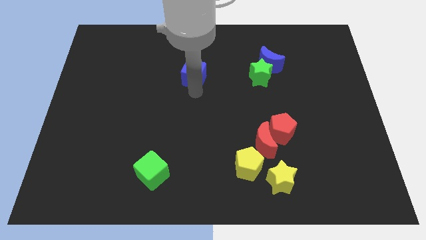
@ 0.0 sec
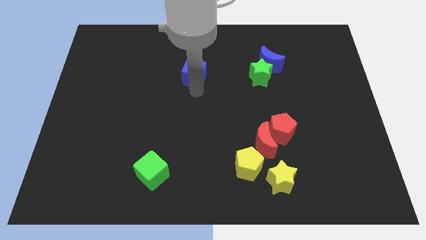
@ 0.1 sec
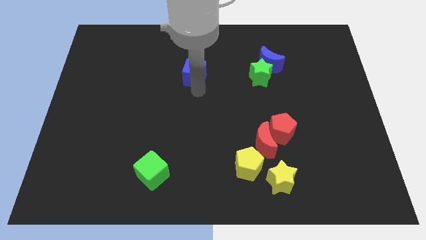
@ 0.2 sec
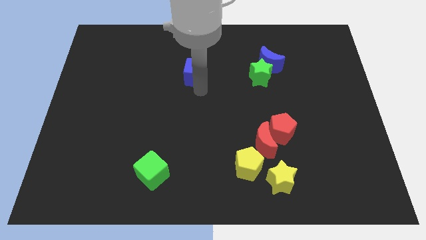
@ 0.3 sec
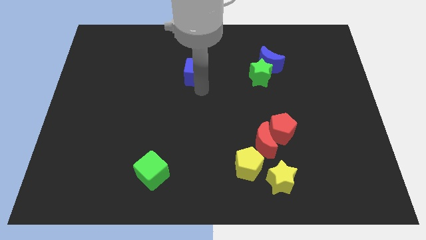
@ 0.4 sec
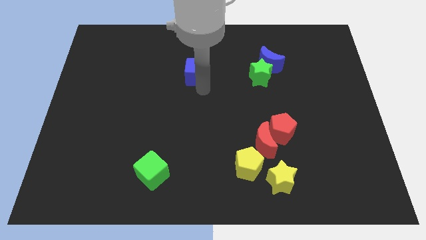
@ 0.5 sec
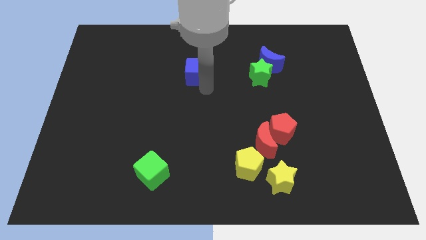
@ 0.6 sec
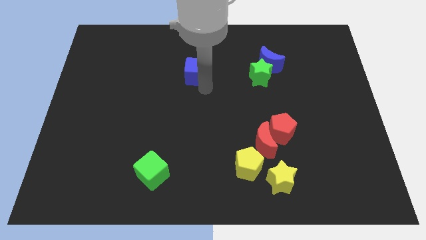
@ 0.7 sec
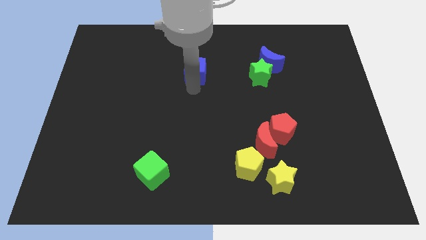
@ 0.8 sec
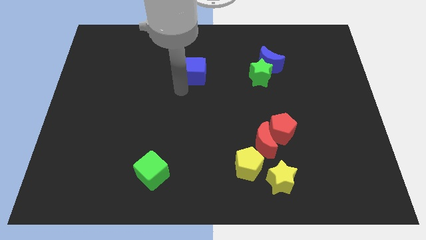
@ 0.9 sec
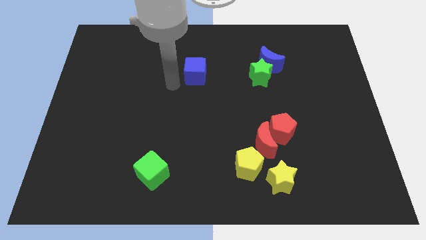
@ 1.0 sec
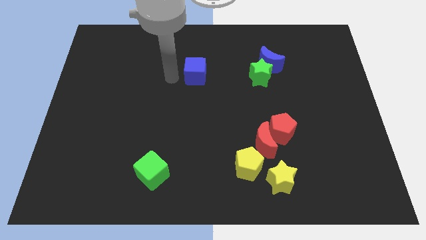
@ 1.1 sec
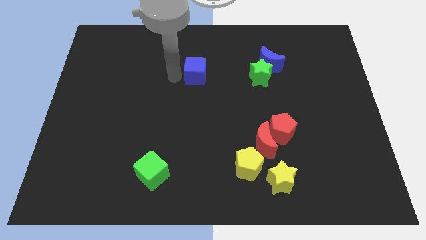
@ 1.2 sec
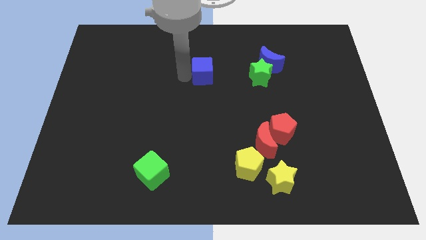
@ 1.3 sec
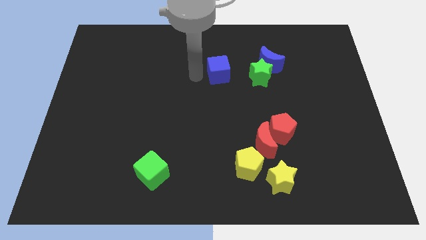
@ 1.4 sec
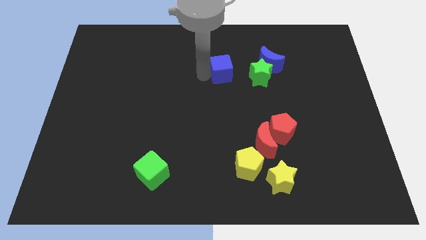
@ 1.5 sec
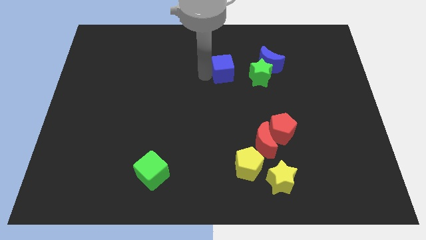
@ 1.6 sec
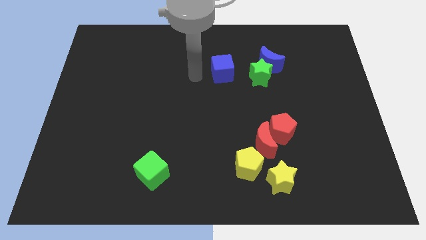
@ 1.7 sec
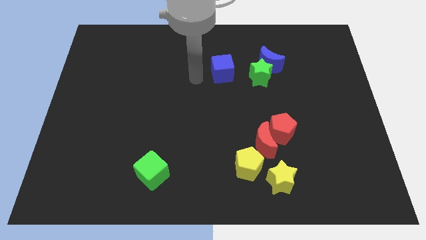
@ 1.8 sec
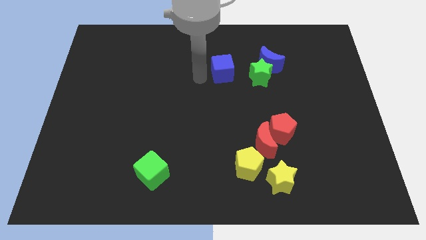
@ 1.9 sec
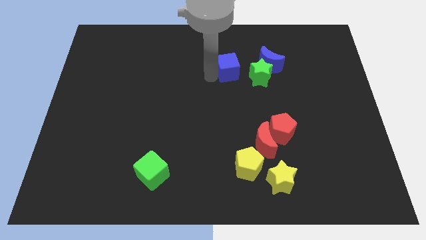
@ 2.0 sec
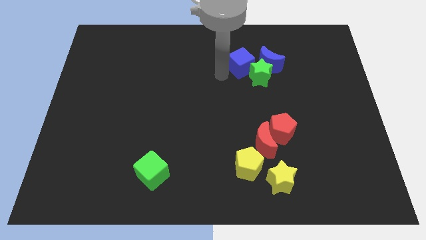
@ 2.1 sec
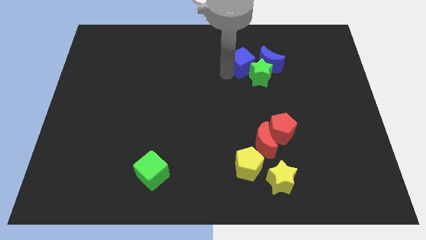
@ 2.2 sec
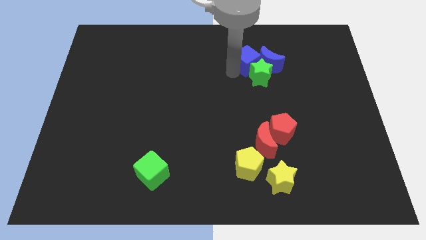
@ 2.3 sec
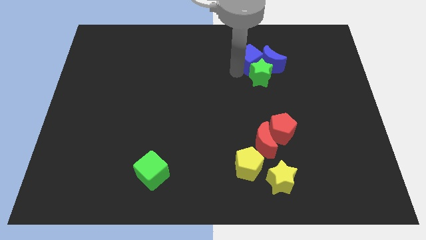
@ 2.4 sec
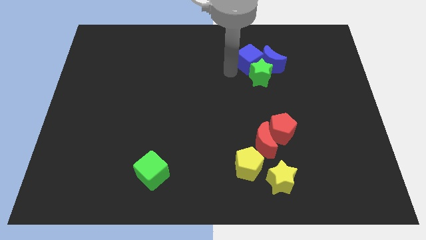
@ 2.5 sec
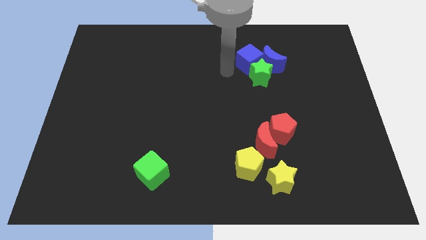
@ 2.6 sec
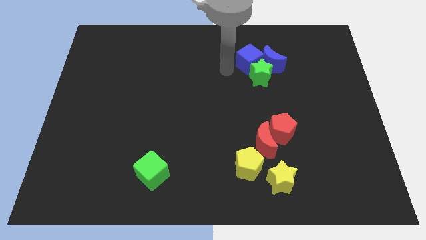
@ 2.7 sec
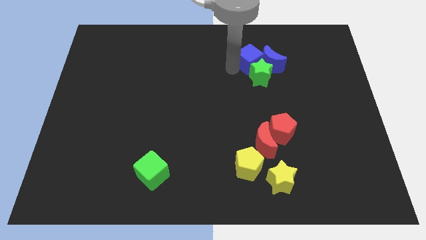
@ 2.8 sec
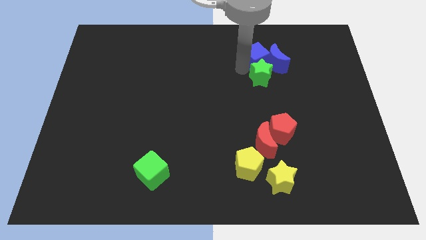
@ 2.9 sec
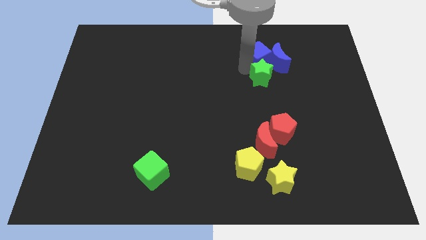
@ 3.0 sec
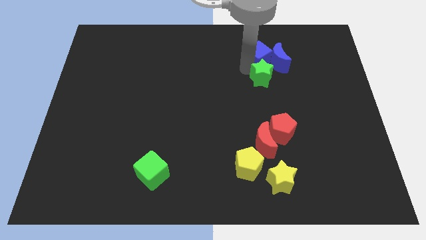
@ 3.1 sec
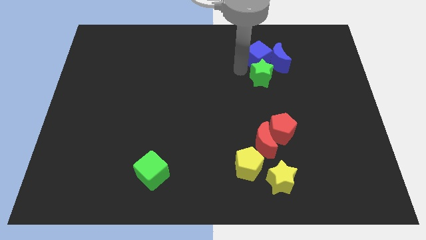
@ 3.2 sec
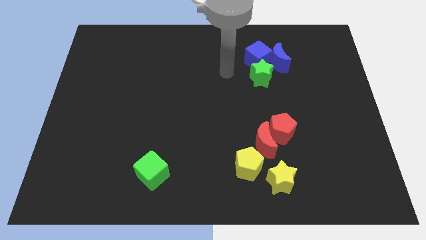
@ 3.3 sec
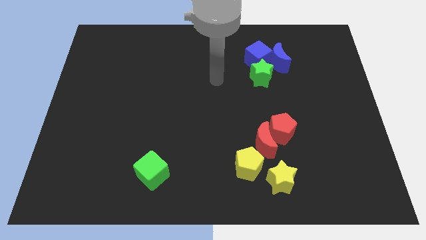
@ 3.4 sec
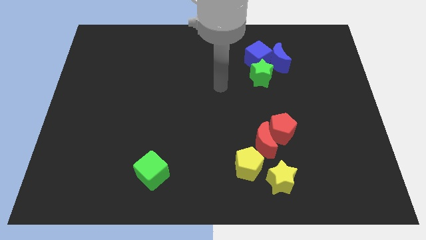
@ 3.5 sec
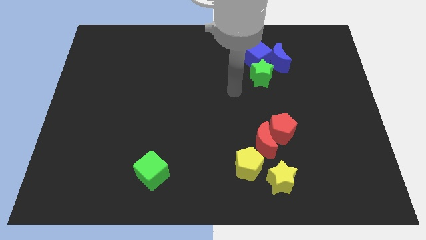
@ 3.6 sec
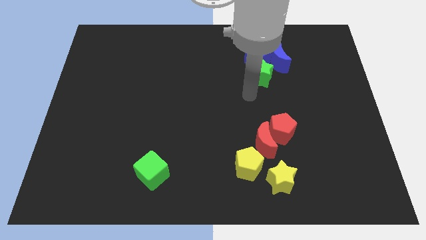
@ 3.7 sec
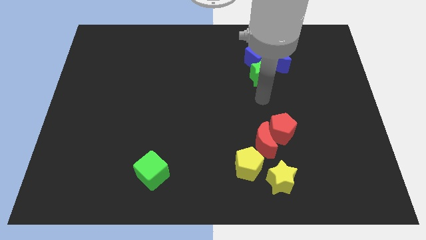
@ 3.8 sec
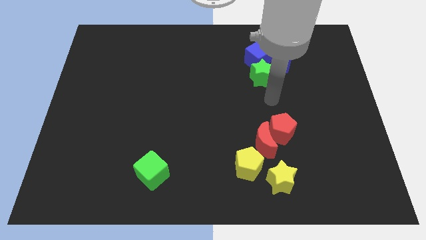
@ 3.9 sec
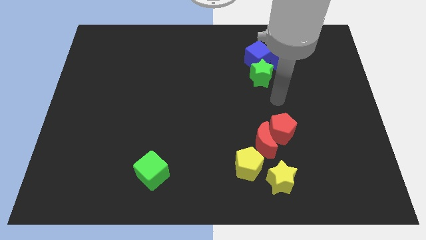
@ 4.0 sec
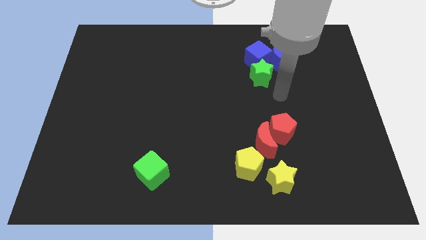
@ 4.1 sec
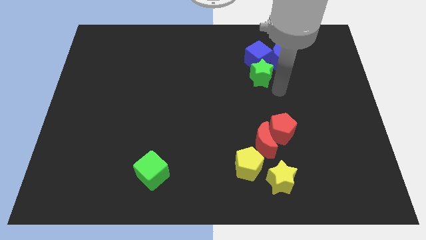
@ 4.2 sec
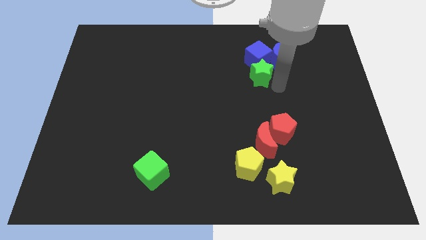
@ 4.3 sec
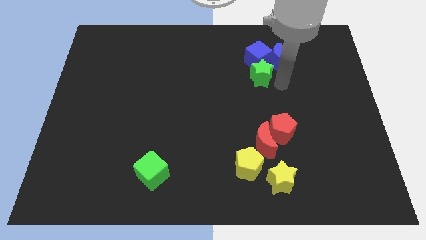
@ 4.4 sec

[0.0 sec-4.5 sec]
place blue cube to the top of green star

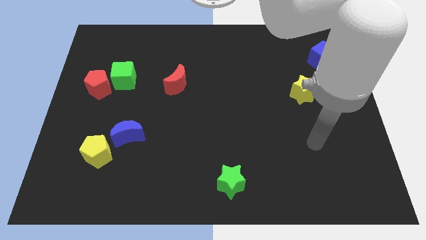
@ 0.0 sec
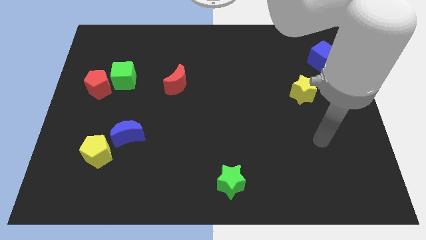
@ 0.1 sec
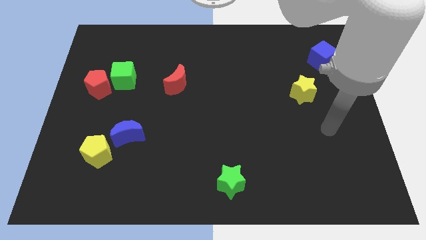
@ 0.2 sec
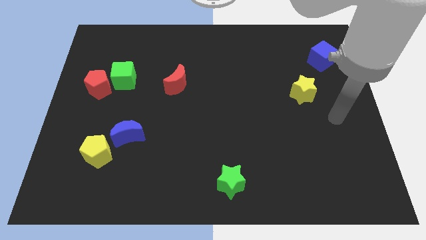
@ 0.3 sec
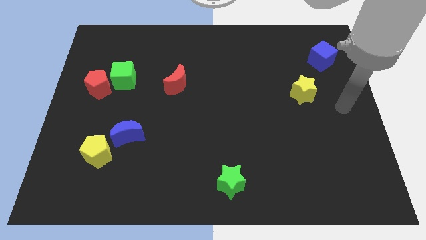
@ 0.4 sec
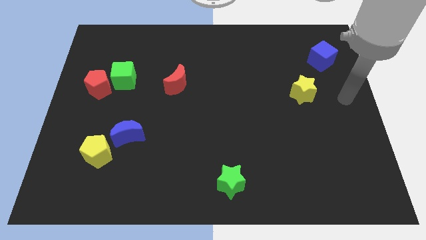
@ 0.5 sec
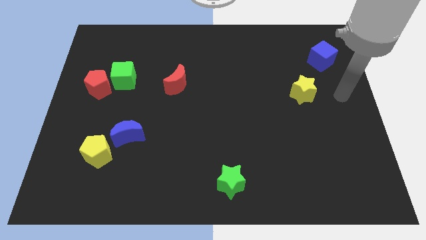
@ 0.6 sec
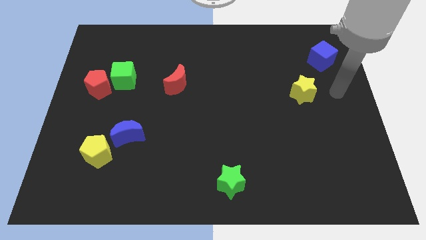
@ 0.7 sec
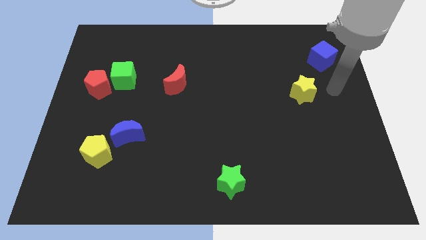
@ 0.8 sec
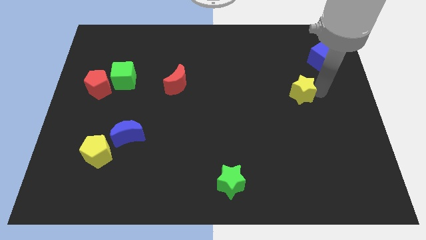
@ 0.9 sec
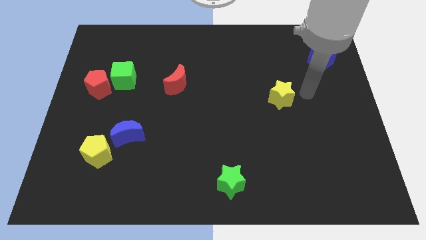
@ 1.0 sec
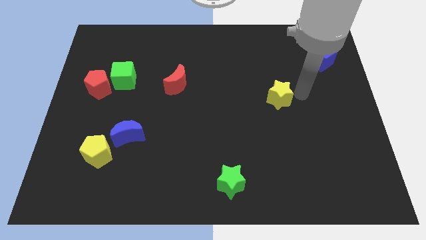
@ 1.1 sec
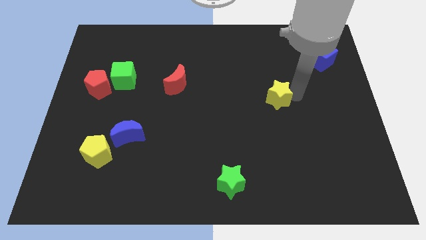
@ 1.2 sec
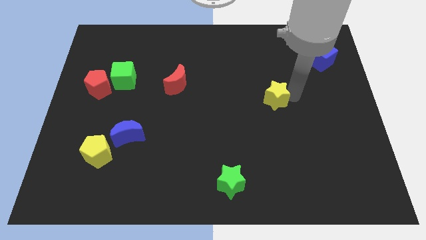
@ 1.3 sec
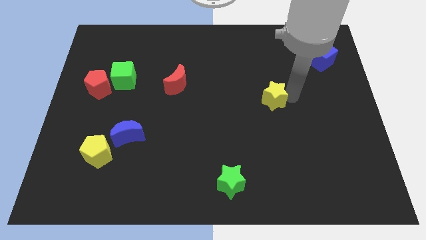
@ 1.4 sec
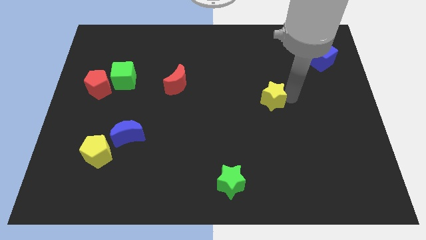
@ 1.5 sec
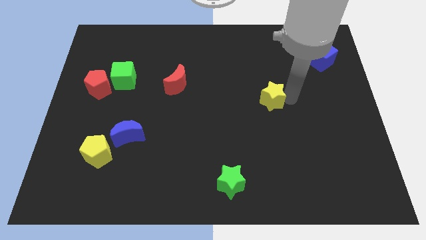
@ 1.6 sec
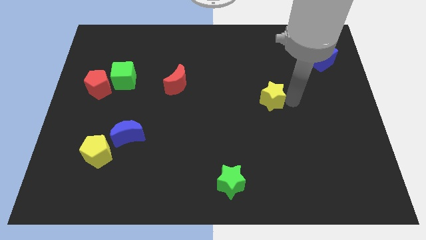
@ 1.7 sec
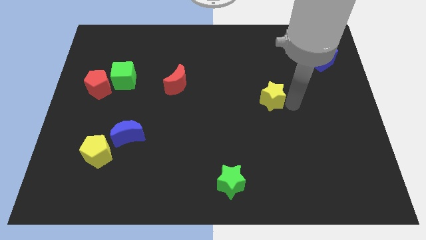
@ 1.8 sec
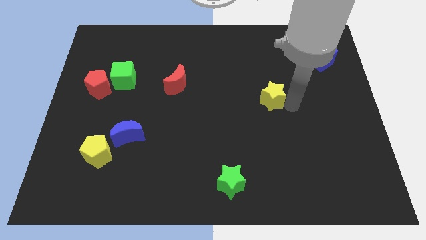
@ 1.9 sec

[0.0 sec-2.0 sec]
push the yellow star slightly to the left

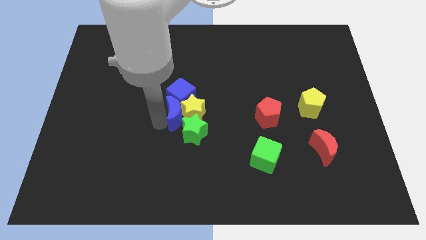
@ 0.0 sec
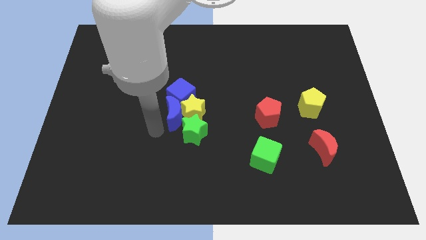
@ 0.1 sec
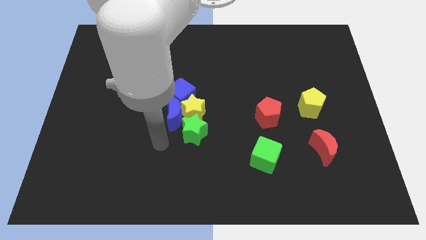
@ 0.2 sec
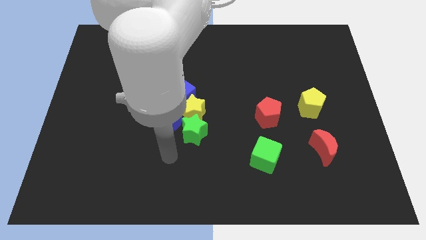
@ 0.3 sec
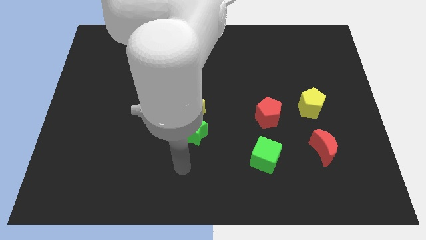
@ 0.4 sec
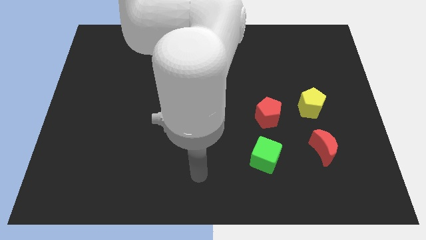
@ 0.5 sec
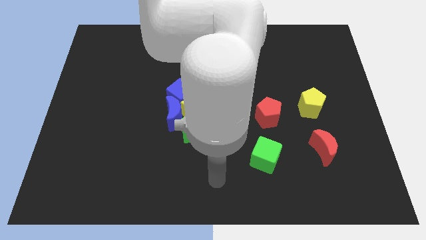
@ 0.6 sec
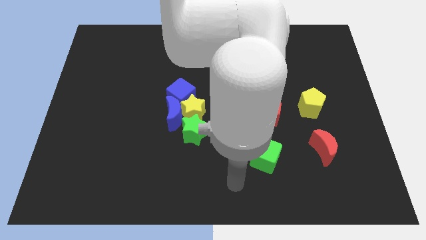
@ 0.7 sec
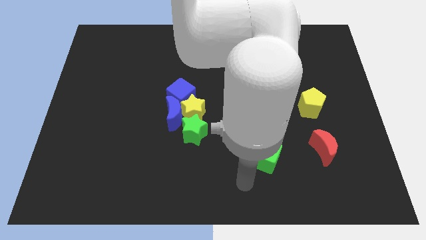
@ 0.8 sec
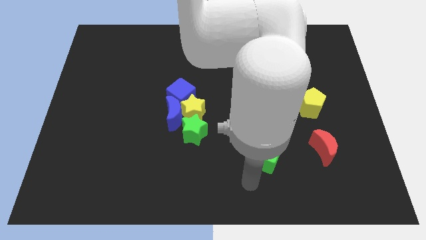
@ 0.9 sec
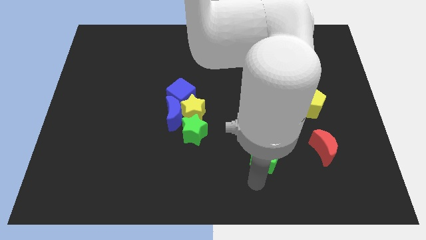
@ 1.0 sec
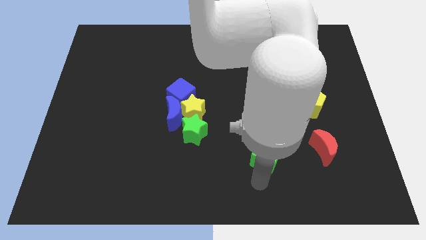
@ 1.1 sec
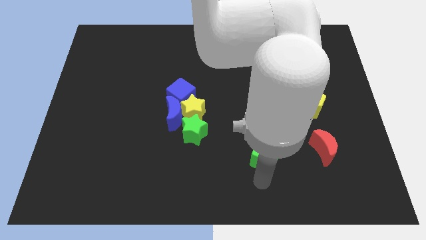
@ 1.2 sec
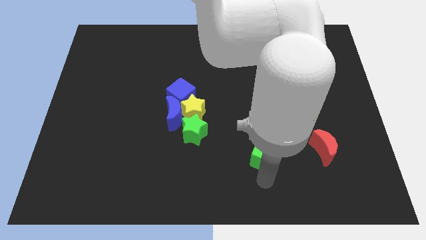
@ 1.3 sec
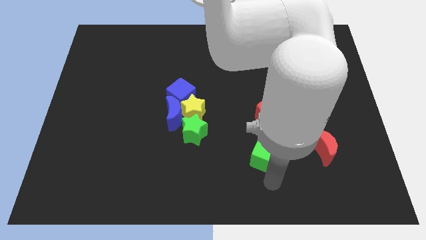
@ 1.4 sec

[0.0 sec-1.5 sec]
place your arm below the green cube

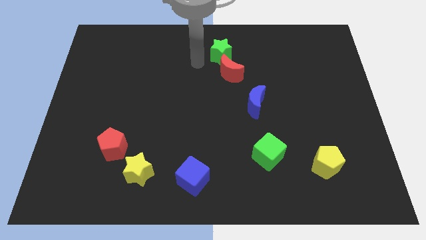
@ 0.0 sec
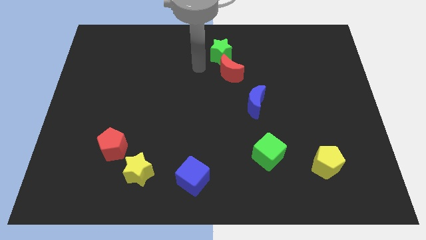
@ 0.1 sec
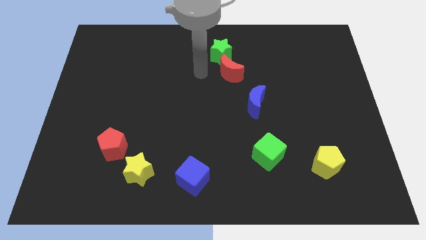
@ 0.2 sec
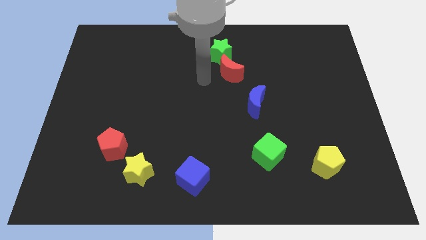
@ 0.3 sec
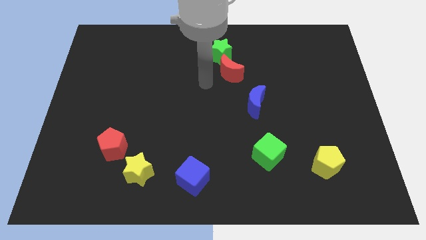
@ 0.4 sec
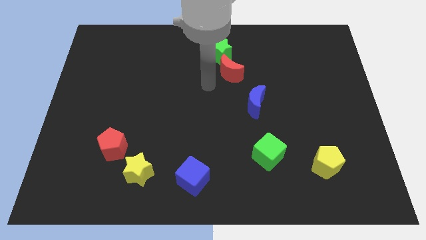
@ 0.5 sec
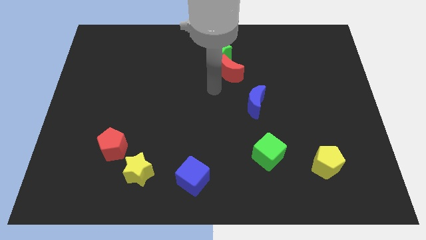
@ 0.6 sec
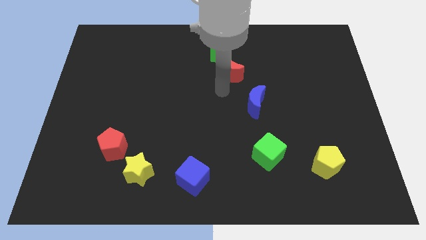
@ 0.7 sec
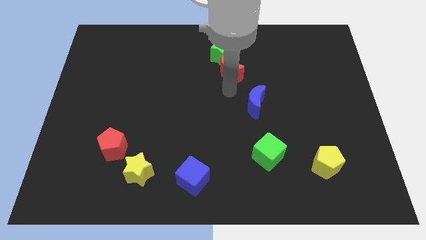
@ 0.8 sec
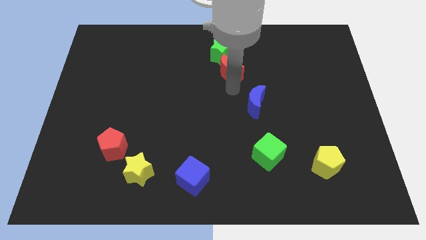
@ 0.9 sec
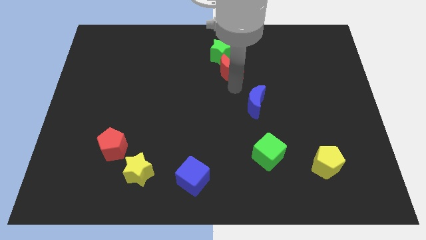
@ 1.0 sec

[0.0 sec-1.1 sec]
place your arm below red moon
